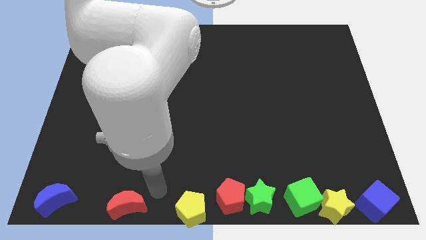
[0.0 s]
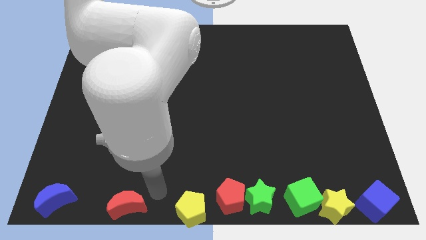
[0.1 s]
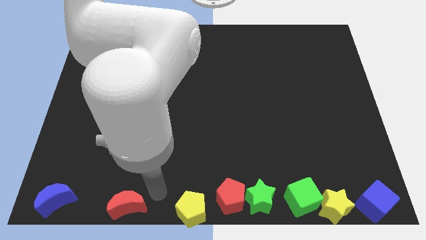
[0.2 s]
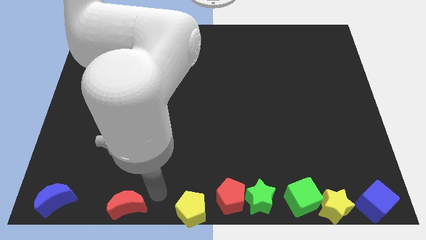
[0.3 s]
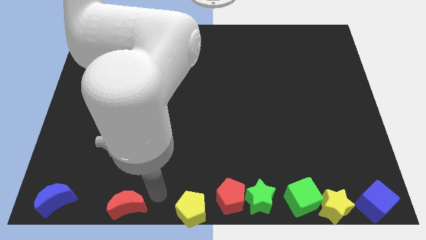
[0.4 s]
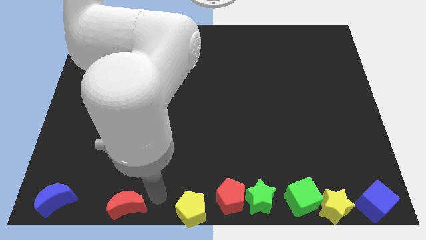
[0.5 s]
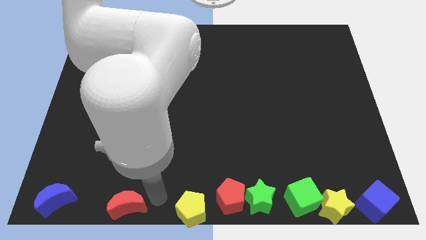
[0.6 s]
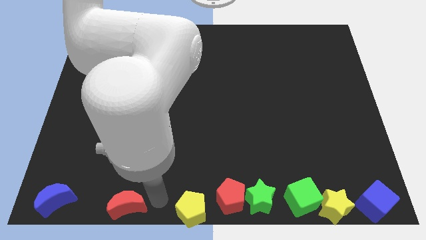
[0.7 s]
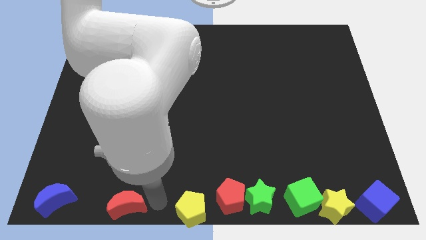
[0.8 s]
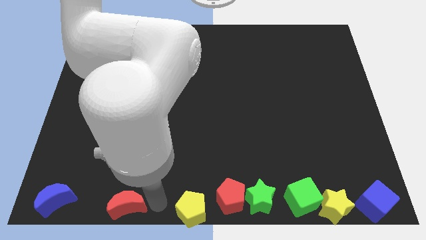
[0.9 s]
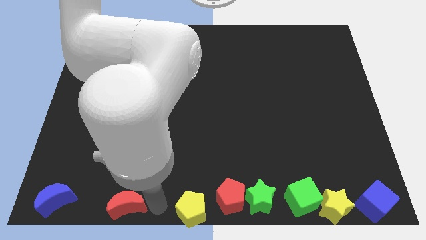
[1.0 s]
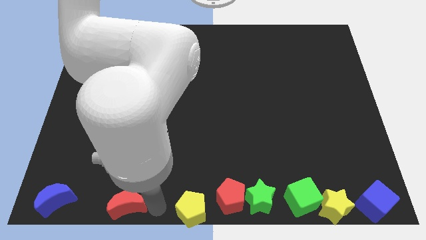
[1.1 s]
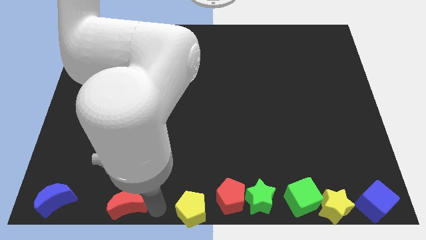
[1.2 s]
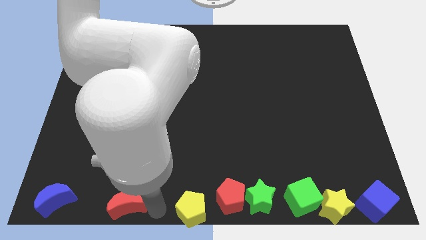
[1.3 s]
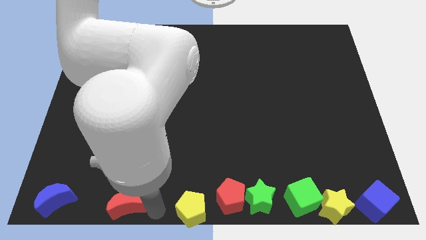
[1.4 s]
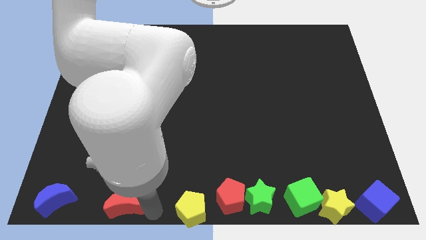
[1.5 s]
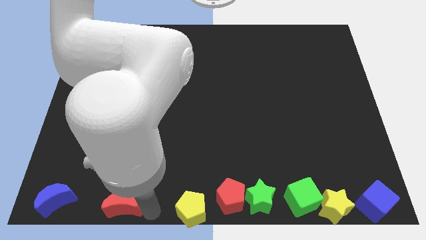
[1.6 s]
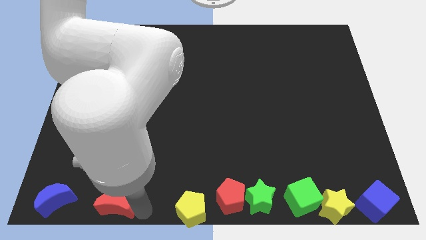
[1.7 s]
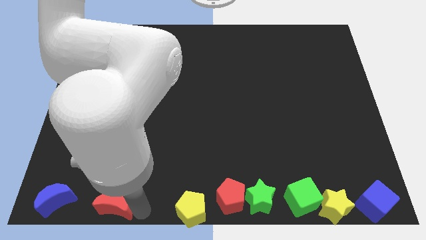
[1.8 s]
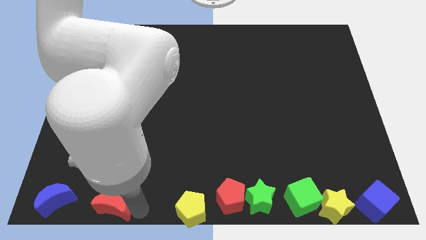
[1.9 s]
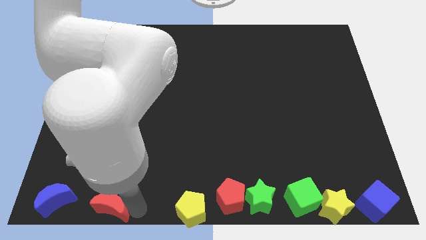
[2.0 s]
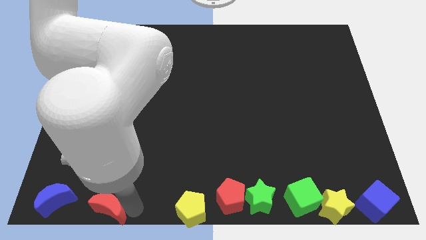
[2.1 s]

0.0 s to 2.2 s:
place the red moon right side to the blue crescent

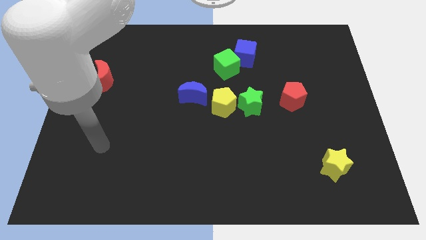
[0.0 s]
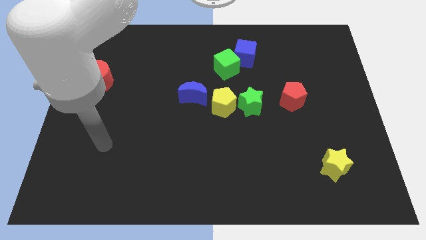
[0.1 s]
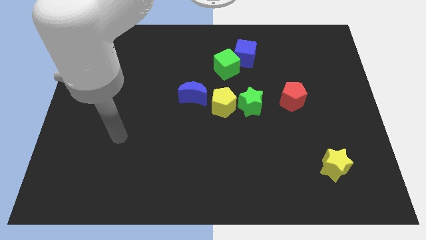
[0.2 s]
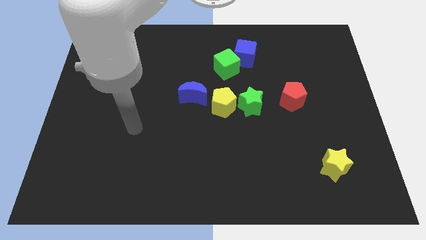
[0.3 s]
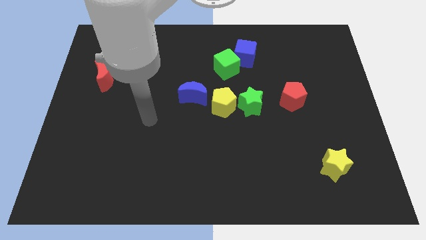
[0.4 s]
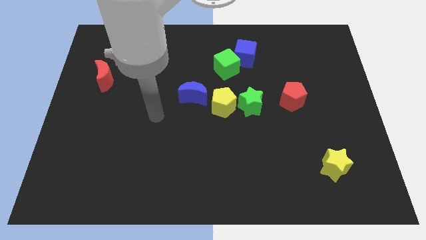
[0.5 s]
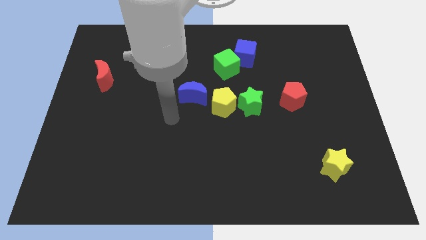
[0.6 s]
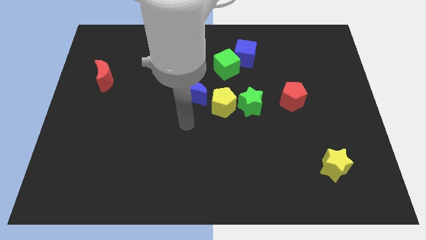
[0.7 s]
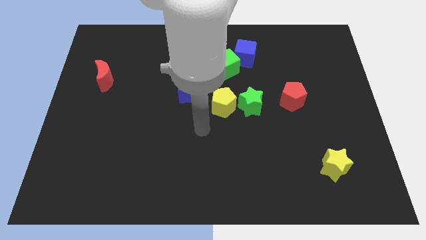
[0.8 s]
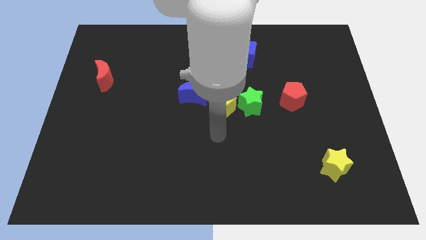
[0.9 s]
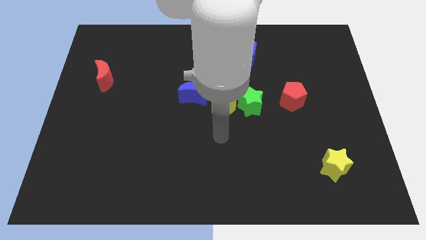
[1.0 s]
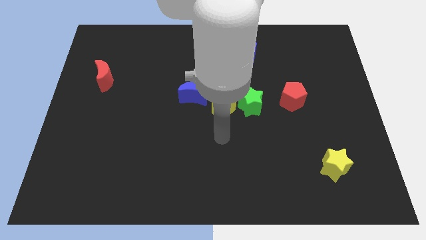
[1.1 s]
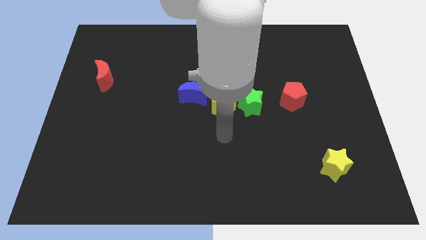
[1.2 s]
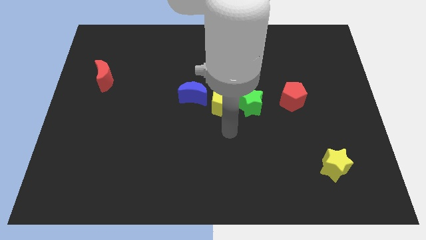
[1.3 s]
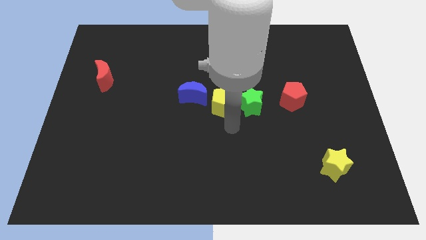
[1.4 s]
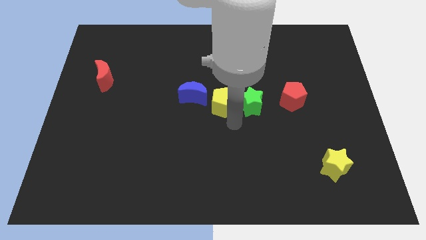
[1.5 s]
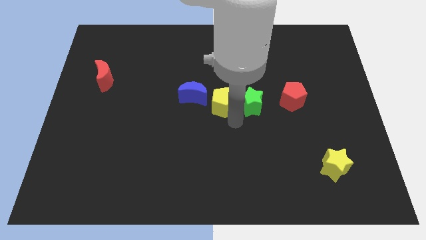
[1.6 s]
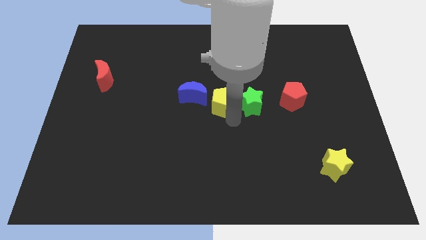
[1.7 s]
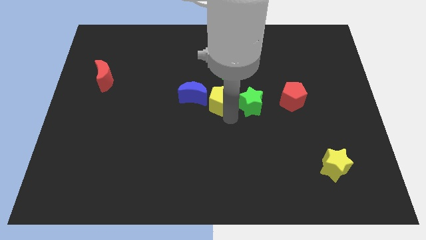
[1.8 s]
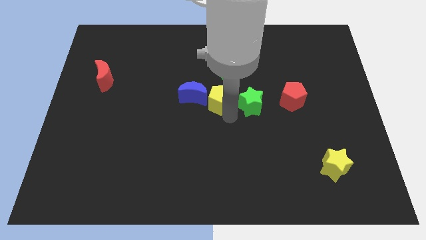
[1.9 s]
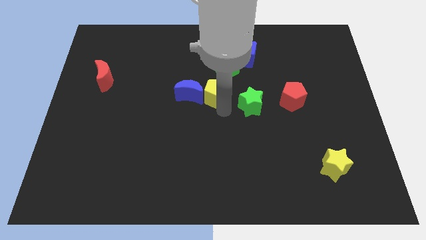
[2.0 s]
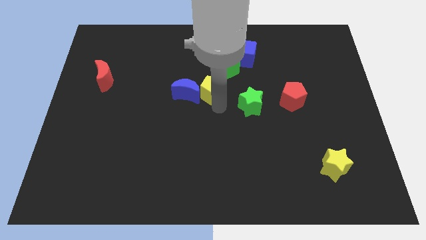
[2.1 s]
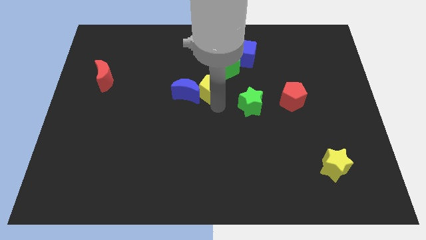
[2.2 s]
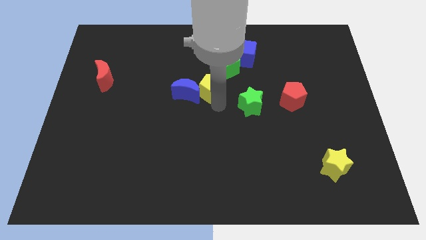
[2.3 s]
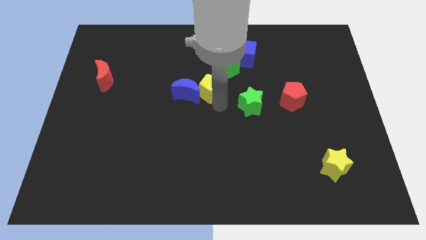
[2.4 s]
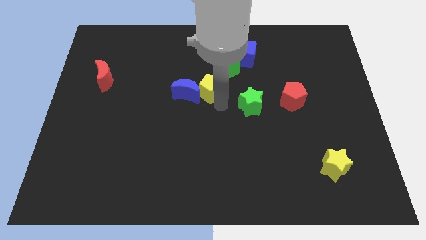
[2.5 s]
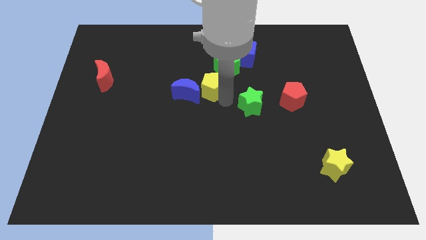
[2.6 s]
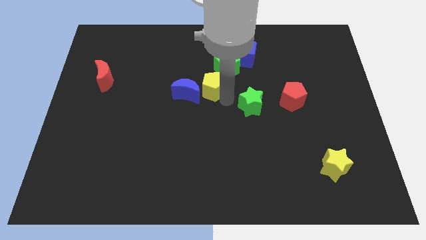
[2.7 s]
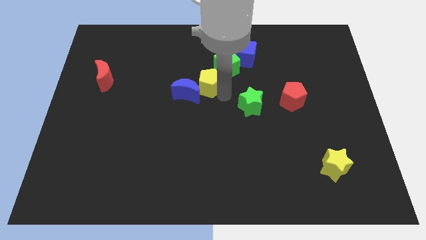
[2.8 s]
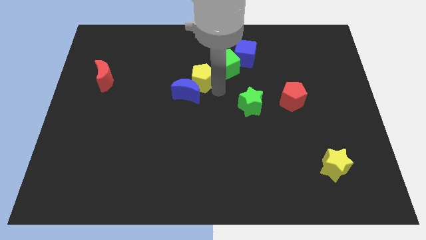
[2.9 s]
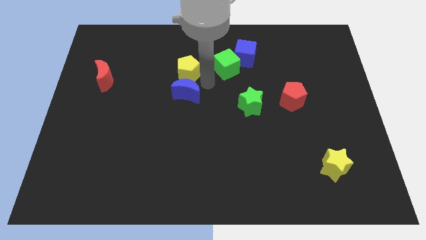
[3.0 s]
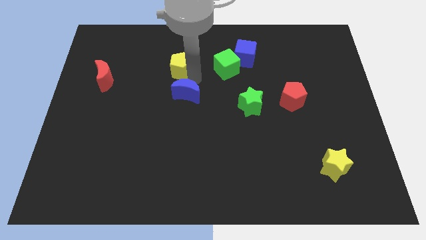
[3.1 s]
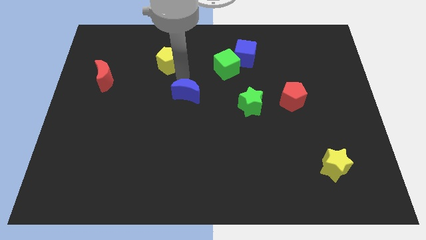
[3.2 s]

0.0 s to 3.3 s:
move the yellow pentagon to the top of the blue crescent

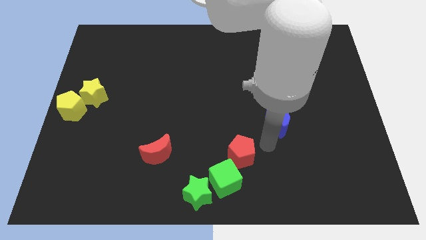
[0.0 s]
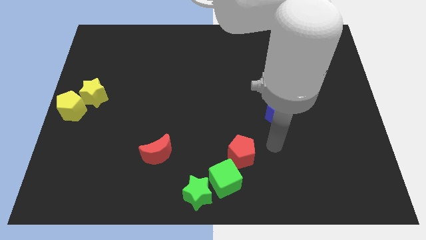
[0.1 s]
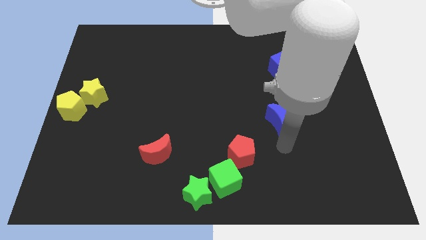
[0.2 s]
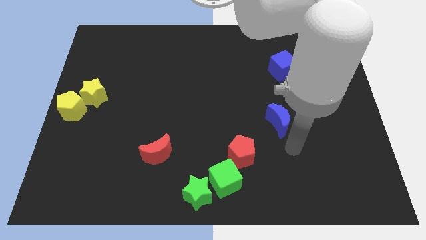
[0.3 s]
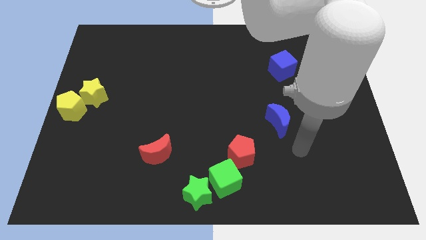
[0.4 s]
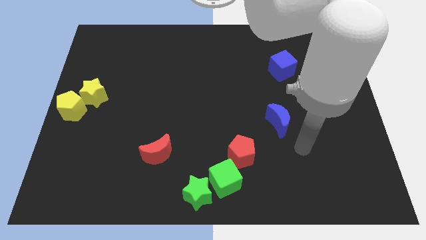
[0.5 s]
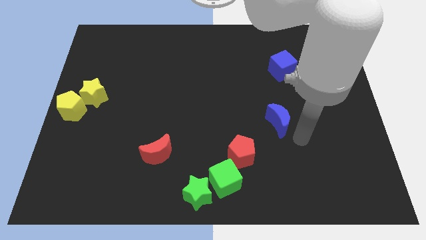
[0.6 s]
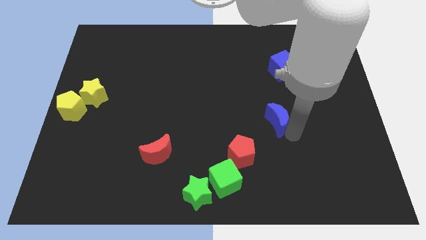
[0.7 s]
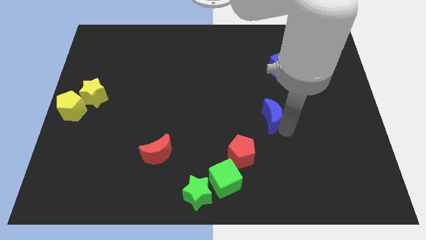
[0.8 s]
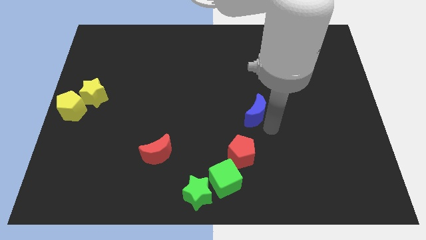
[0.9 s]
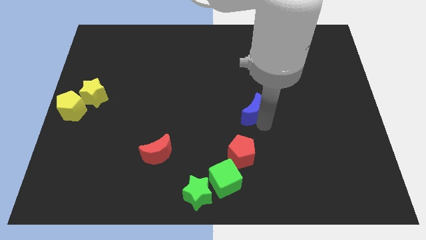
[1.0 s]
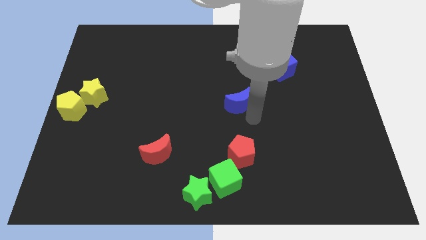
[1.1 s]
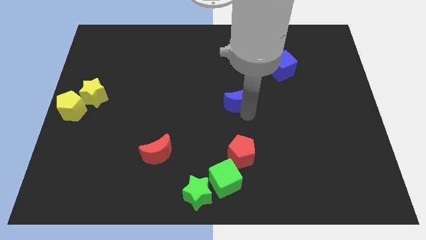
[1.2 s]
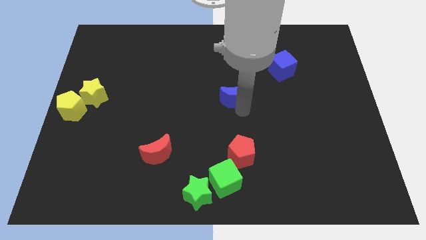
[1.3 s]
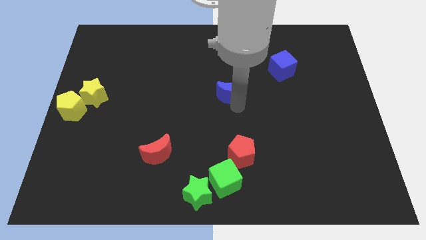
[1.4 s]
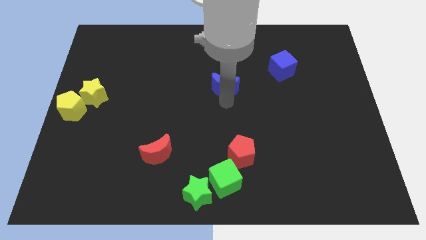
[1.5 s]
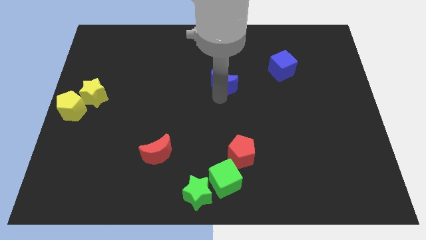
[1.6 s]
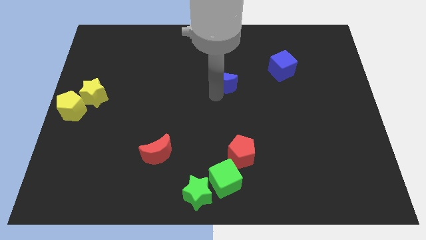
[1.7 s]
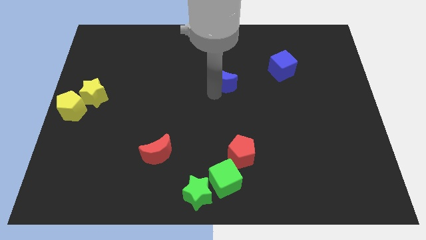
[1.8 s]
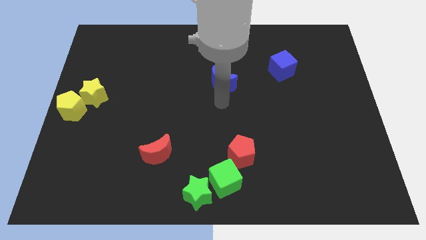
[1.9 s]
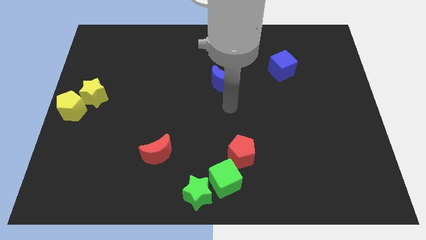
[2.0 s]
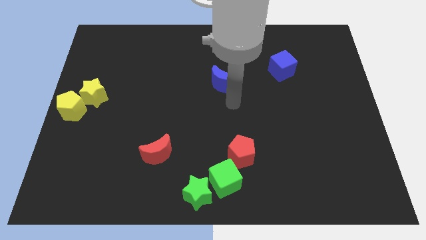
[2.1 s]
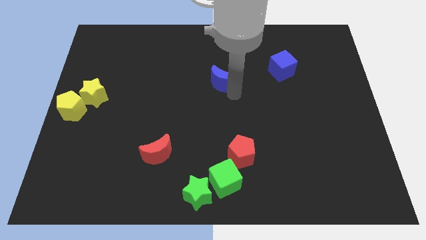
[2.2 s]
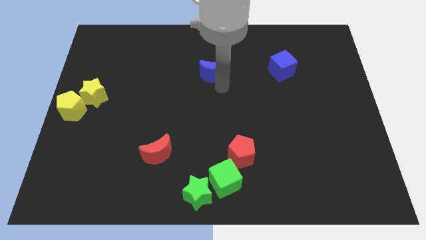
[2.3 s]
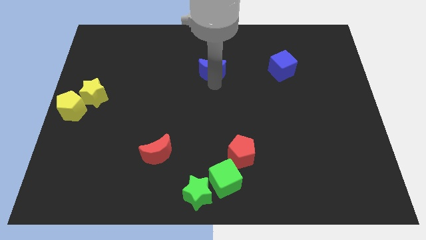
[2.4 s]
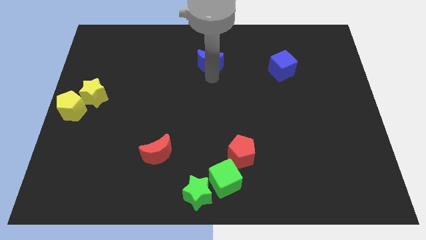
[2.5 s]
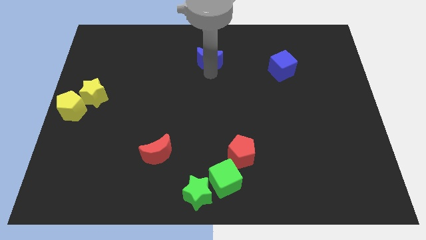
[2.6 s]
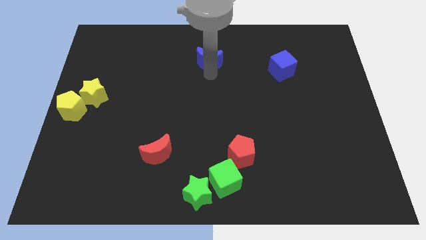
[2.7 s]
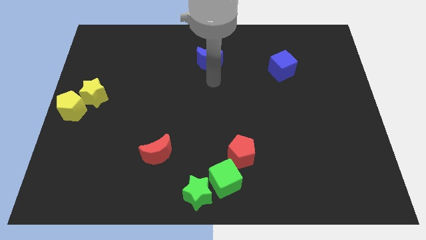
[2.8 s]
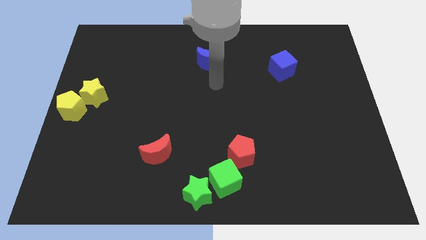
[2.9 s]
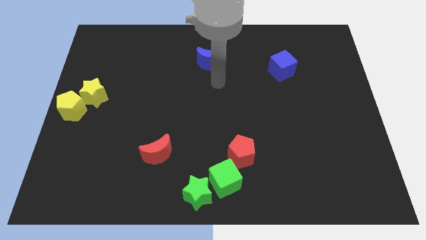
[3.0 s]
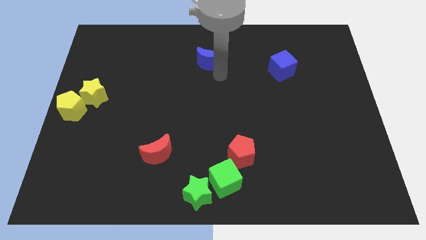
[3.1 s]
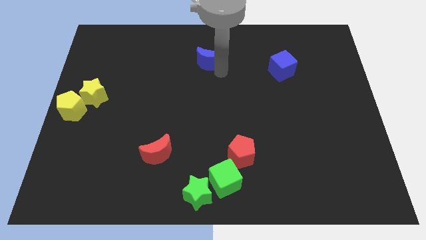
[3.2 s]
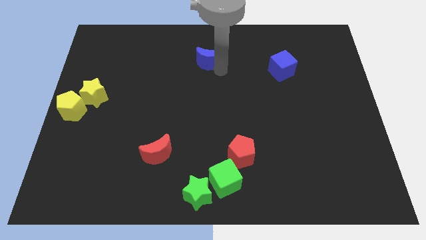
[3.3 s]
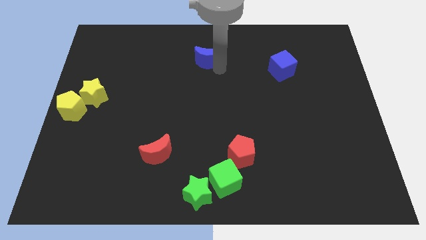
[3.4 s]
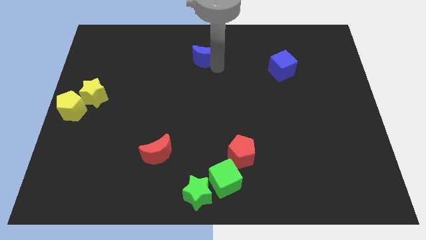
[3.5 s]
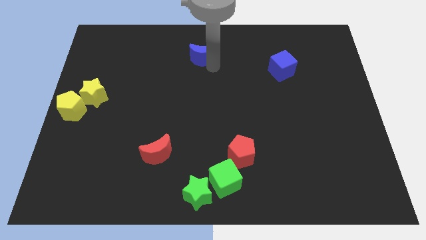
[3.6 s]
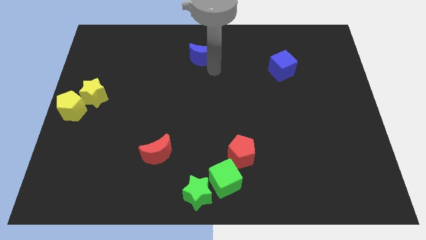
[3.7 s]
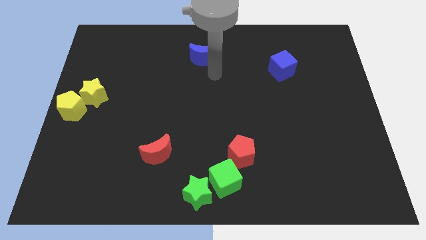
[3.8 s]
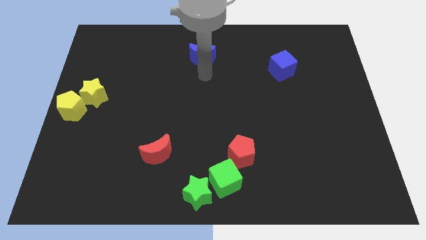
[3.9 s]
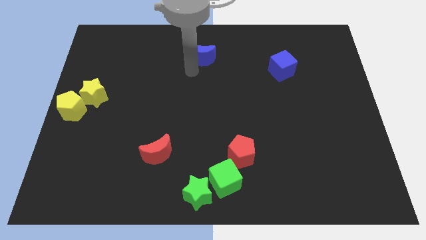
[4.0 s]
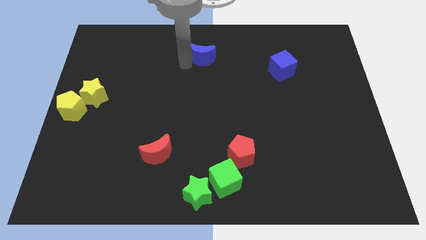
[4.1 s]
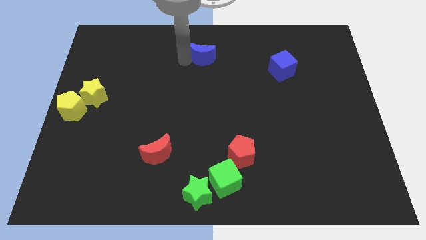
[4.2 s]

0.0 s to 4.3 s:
push the blue crescent to the top side of the table
